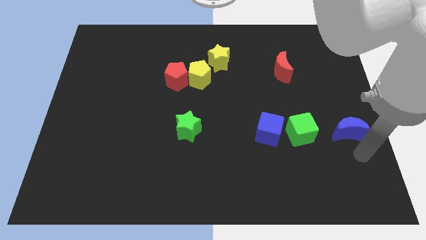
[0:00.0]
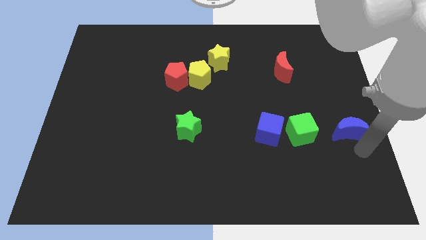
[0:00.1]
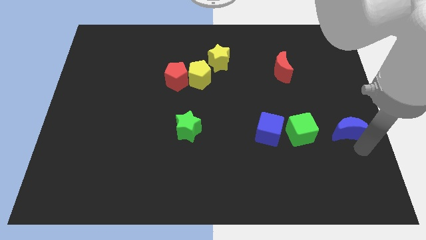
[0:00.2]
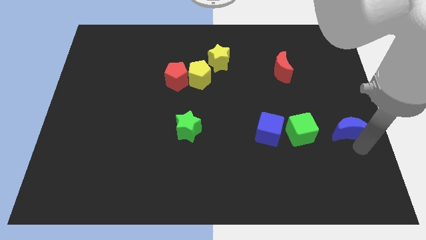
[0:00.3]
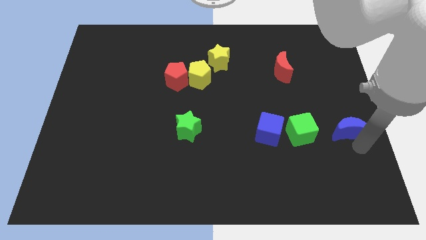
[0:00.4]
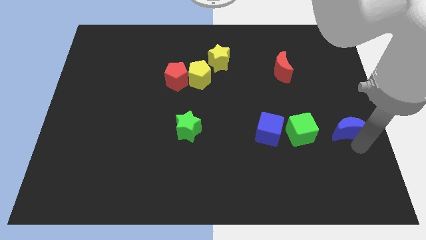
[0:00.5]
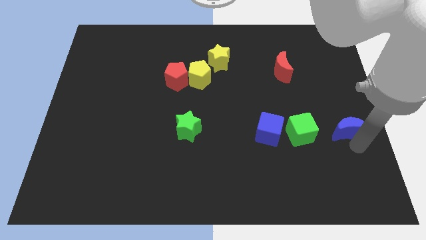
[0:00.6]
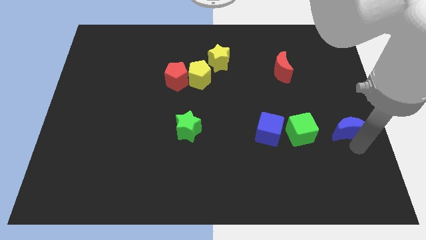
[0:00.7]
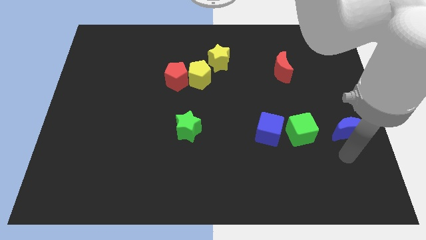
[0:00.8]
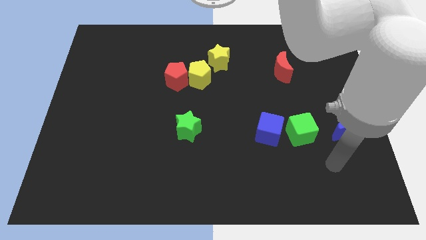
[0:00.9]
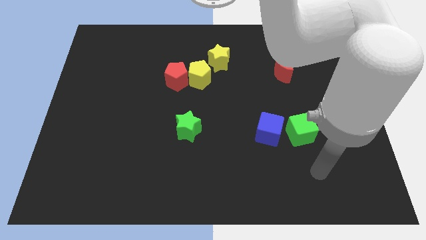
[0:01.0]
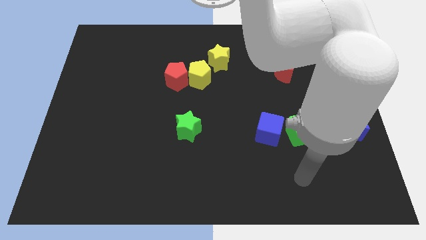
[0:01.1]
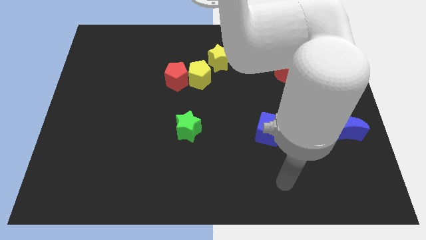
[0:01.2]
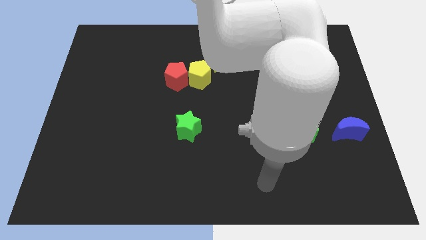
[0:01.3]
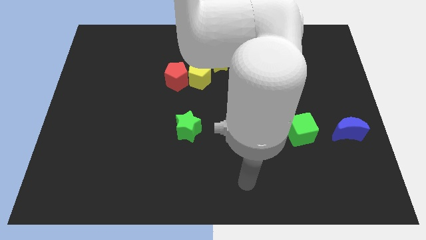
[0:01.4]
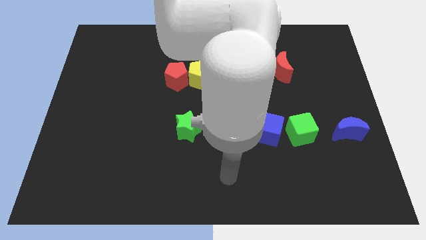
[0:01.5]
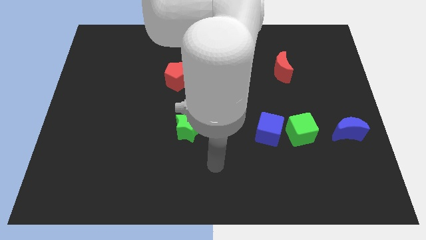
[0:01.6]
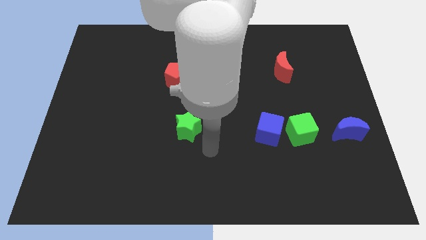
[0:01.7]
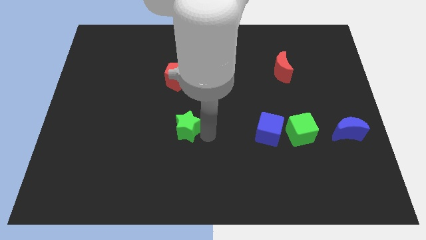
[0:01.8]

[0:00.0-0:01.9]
move your arm down and to the left

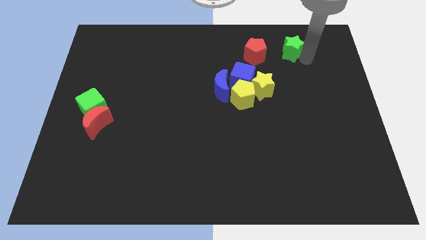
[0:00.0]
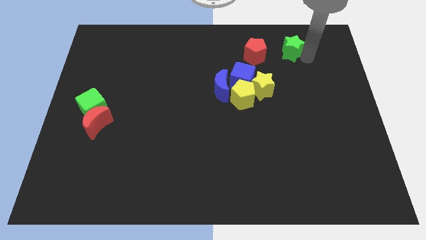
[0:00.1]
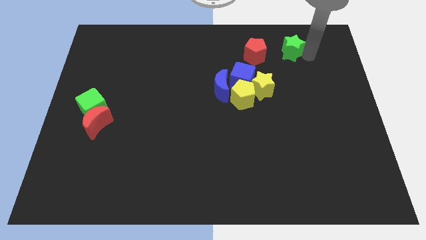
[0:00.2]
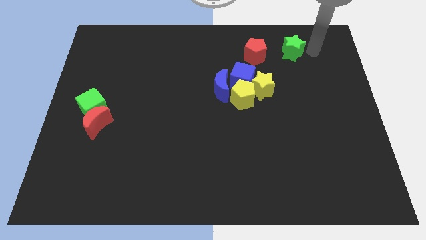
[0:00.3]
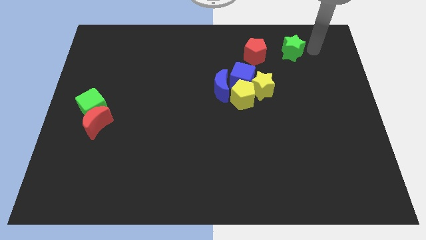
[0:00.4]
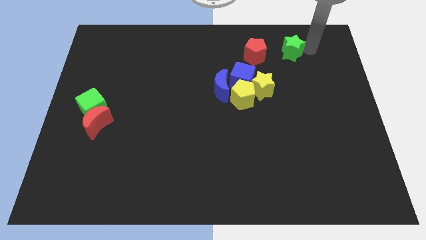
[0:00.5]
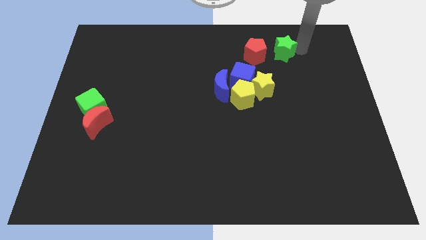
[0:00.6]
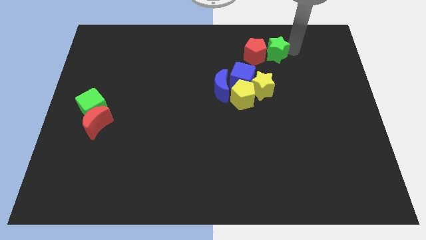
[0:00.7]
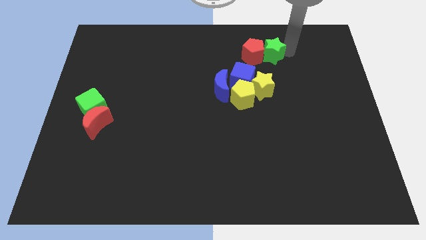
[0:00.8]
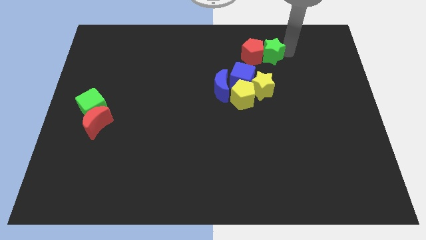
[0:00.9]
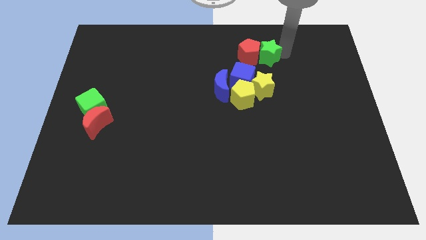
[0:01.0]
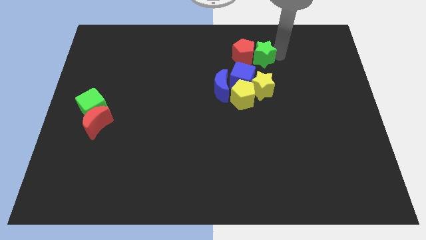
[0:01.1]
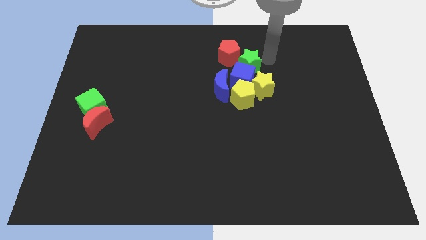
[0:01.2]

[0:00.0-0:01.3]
move the green star into the right side of the red pentagon

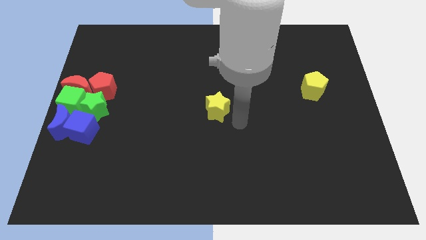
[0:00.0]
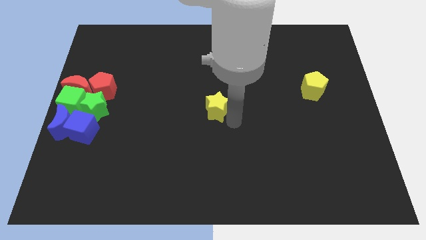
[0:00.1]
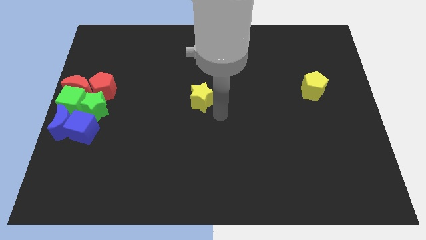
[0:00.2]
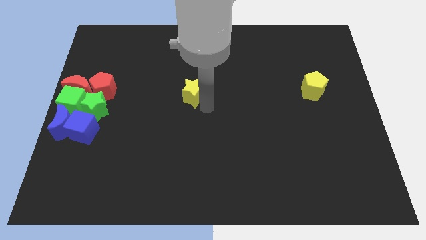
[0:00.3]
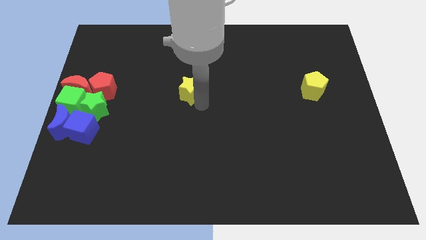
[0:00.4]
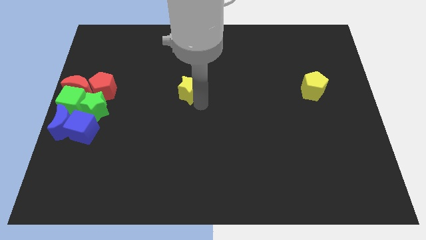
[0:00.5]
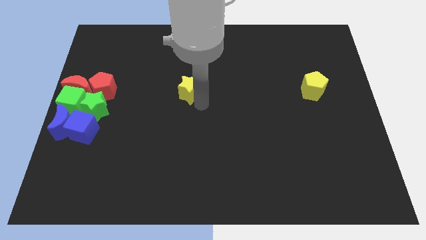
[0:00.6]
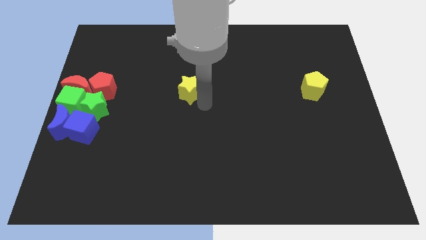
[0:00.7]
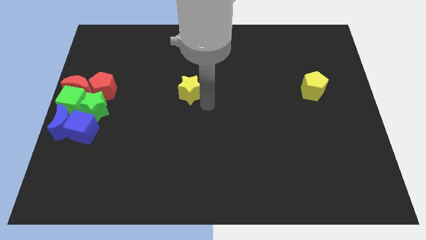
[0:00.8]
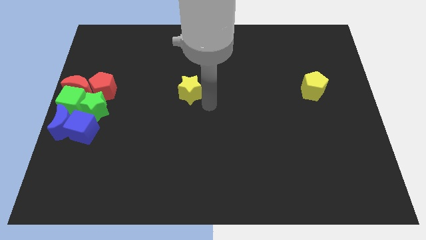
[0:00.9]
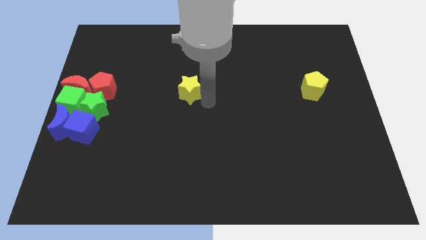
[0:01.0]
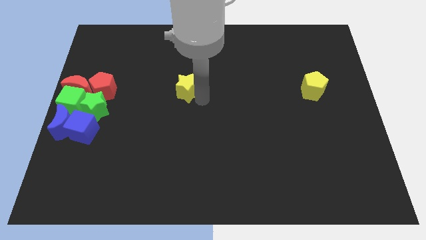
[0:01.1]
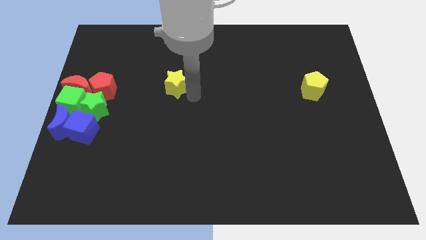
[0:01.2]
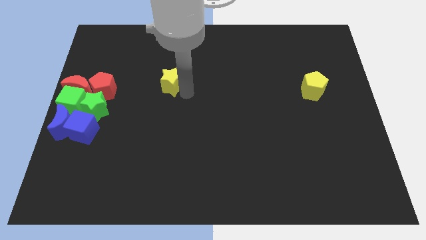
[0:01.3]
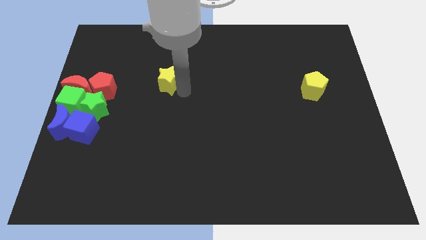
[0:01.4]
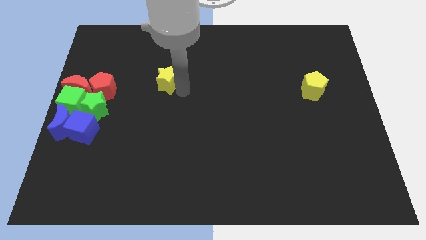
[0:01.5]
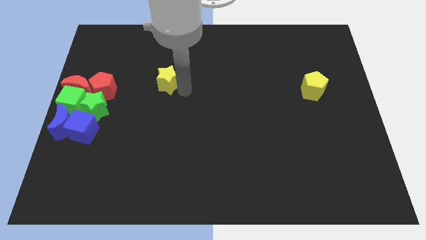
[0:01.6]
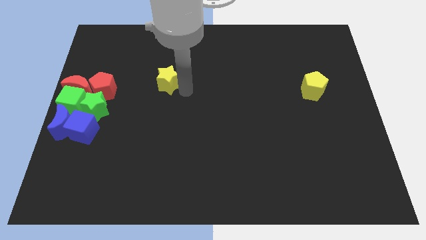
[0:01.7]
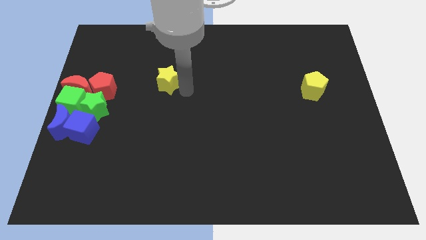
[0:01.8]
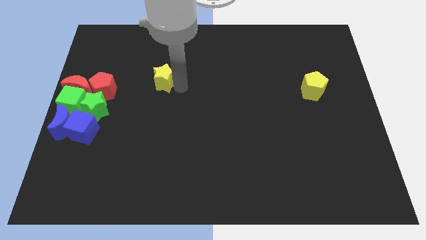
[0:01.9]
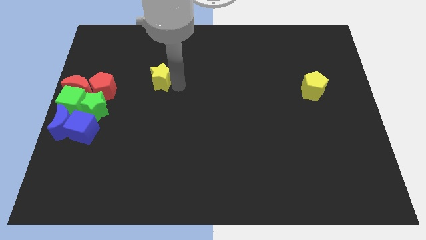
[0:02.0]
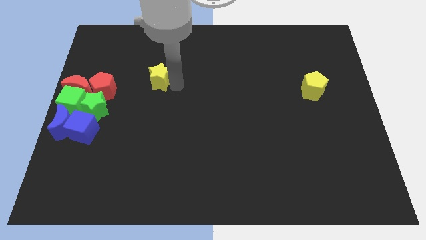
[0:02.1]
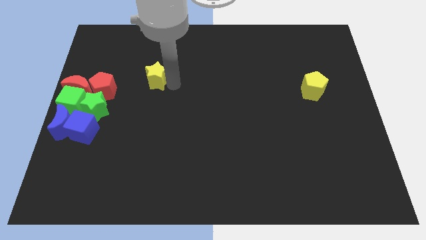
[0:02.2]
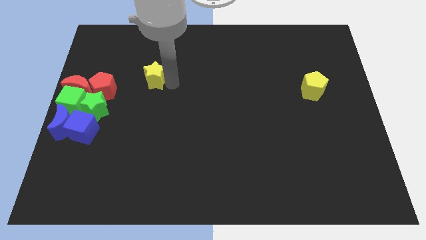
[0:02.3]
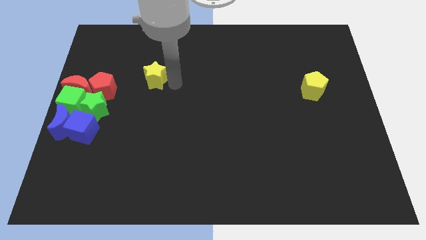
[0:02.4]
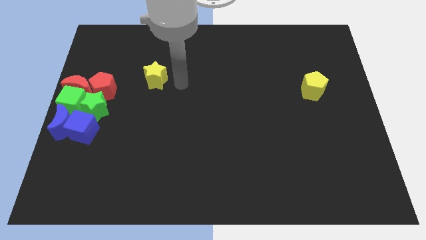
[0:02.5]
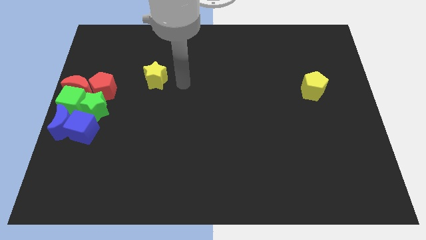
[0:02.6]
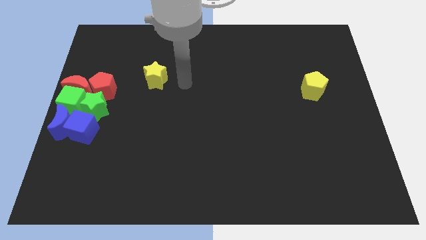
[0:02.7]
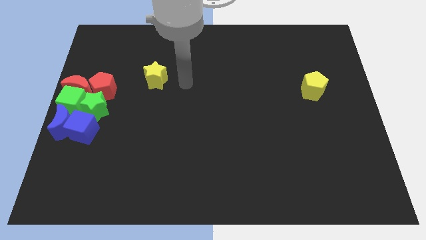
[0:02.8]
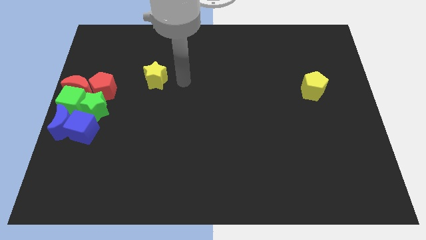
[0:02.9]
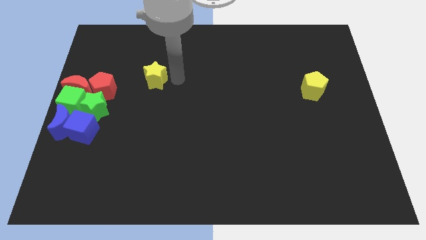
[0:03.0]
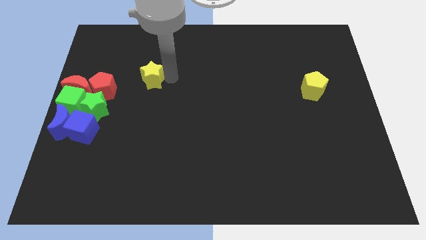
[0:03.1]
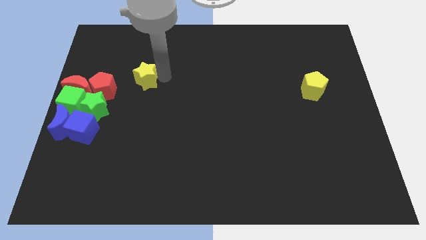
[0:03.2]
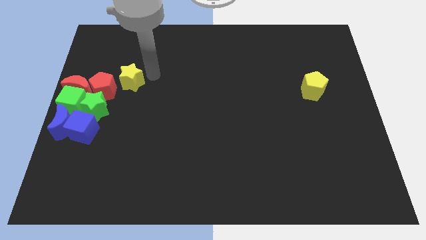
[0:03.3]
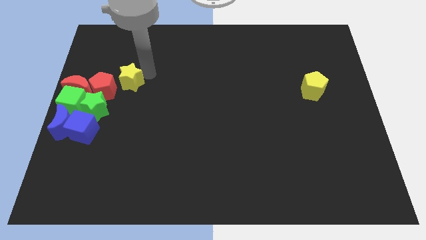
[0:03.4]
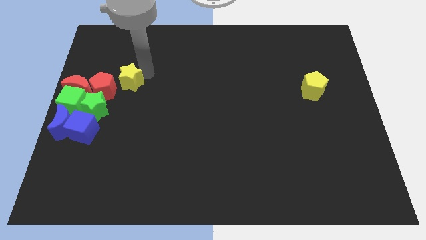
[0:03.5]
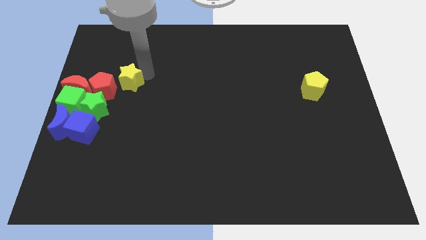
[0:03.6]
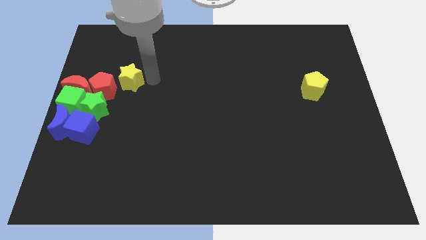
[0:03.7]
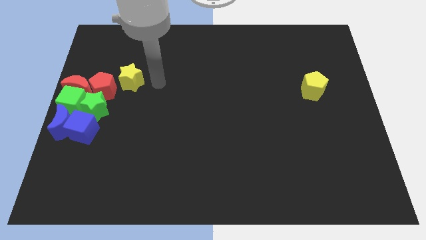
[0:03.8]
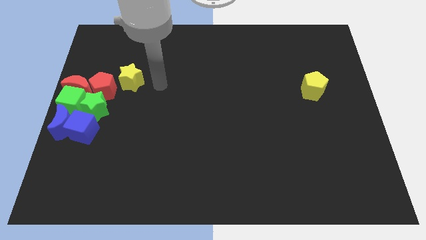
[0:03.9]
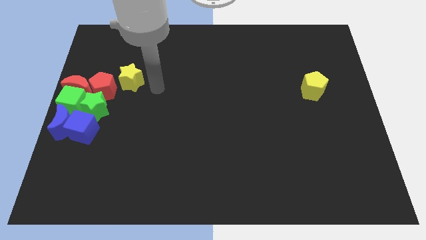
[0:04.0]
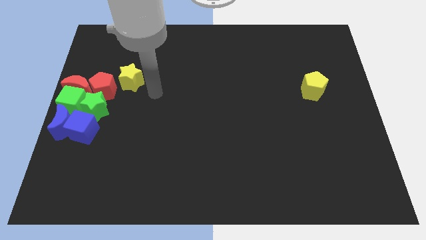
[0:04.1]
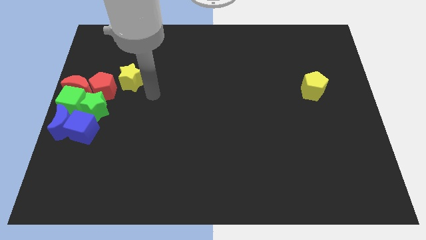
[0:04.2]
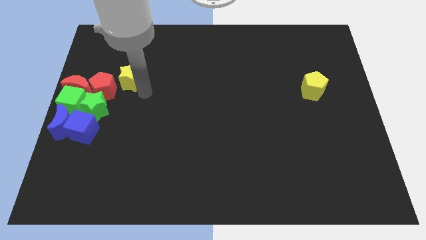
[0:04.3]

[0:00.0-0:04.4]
push the yellow star diagonally to the top right of the red pentagon

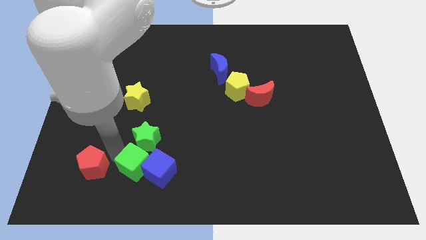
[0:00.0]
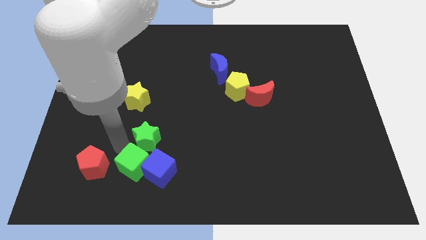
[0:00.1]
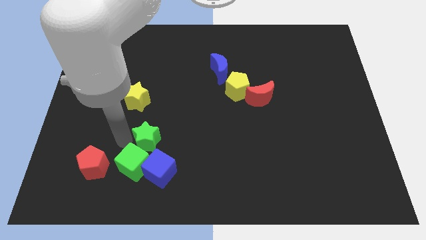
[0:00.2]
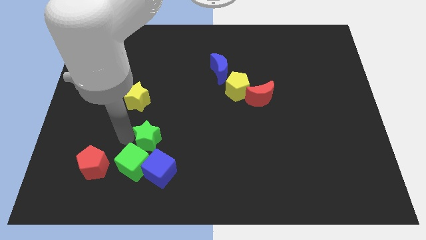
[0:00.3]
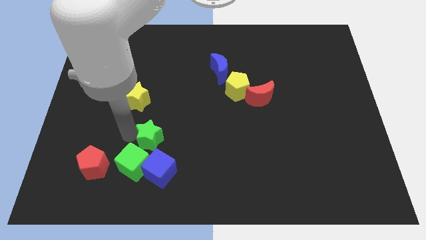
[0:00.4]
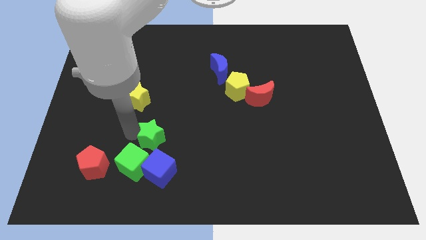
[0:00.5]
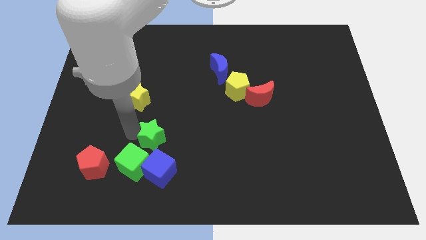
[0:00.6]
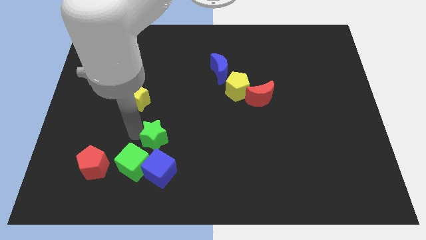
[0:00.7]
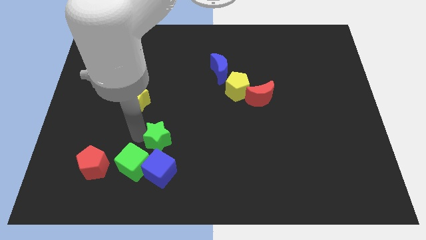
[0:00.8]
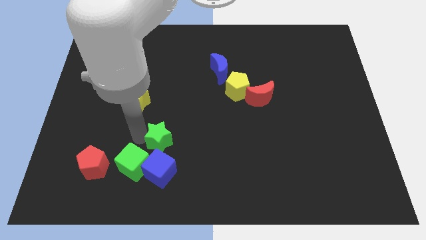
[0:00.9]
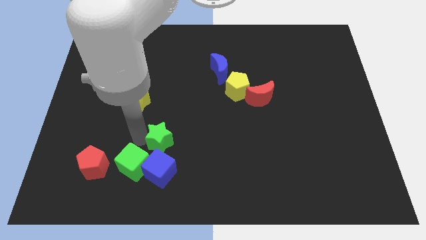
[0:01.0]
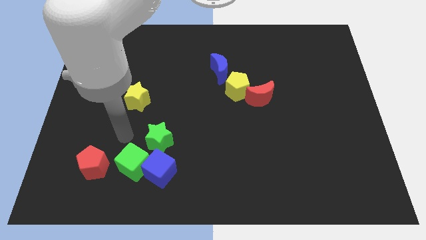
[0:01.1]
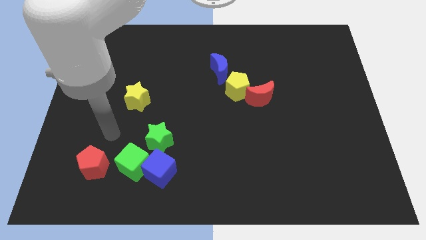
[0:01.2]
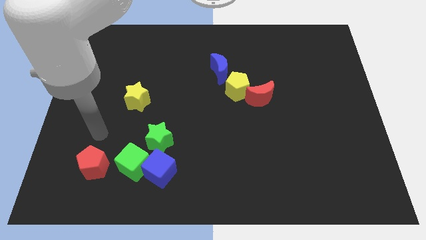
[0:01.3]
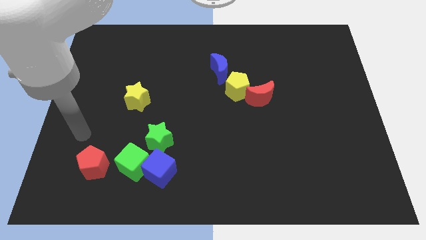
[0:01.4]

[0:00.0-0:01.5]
slide the green star slightly to the right
